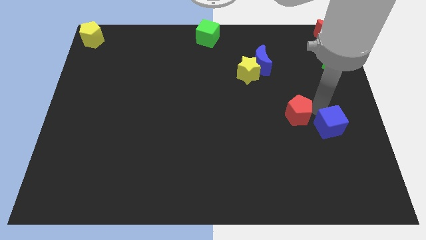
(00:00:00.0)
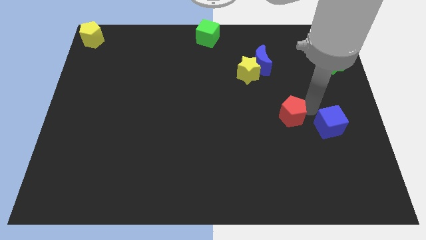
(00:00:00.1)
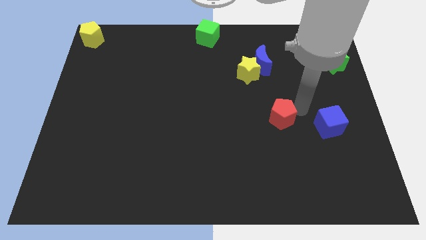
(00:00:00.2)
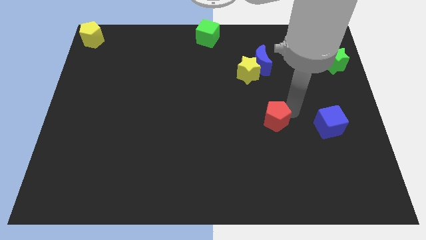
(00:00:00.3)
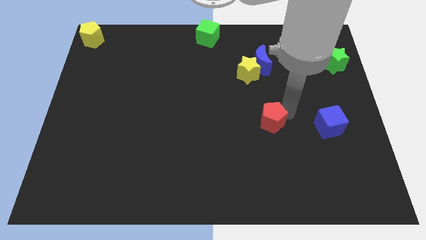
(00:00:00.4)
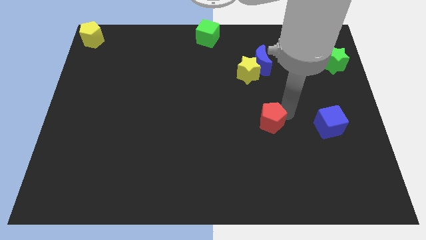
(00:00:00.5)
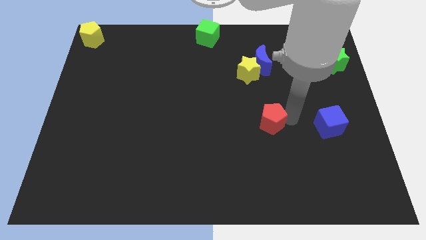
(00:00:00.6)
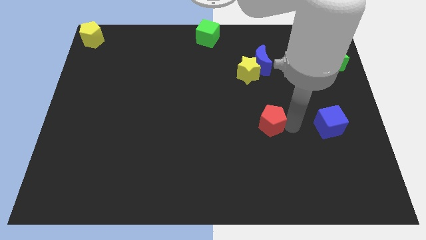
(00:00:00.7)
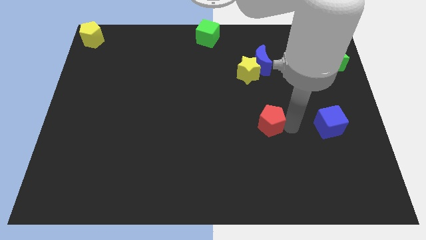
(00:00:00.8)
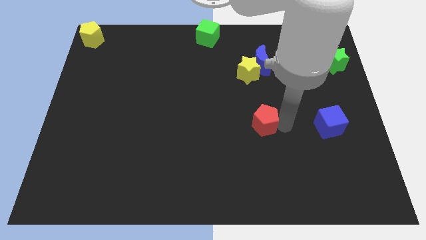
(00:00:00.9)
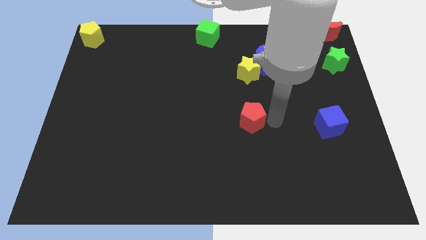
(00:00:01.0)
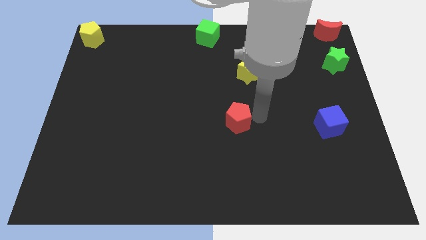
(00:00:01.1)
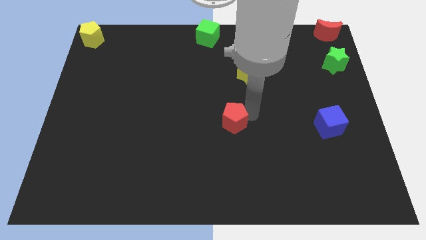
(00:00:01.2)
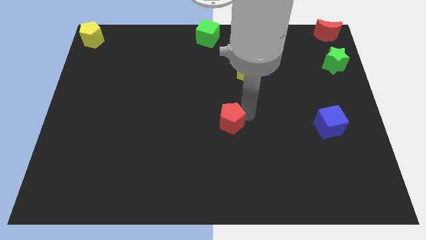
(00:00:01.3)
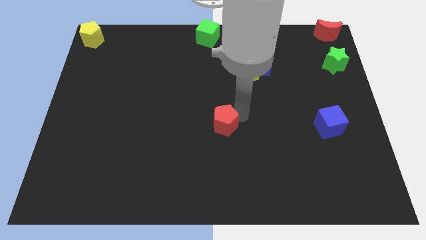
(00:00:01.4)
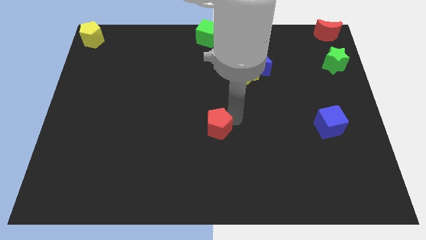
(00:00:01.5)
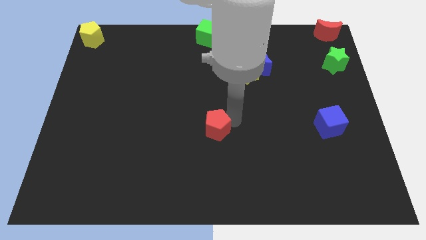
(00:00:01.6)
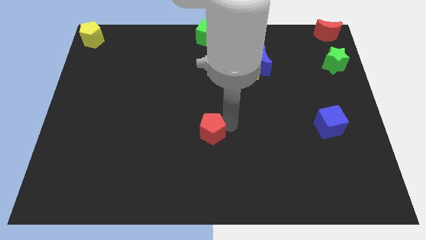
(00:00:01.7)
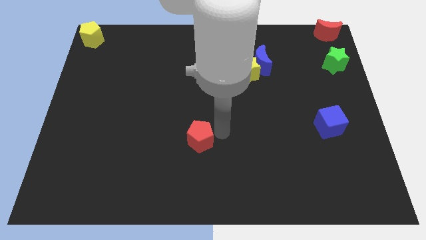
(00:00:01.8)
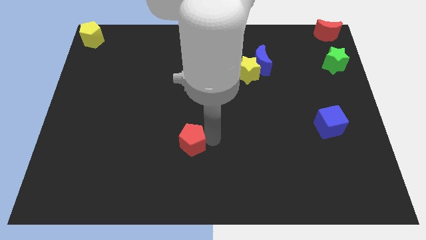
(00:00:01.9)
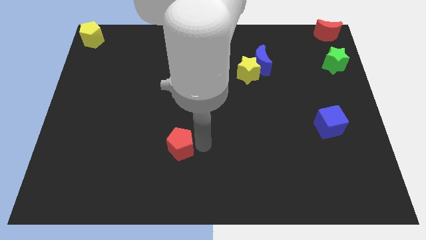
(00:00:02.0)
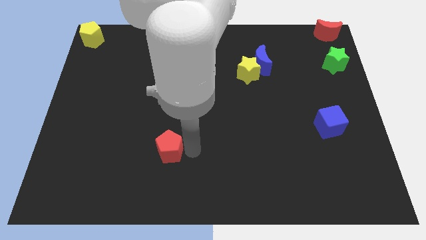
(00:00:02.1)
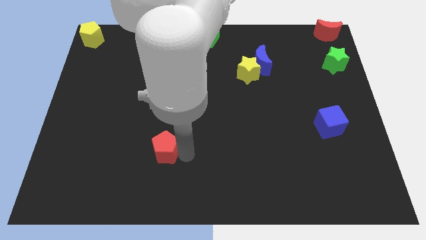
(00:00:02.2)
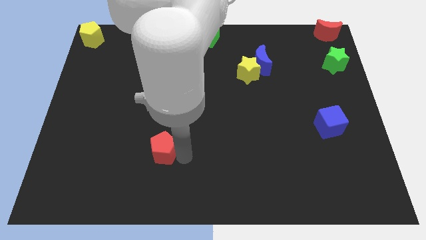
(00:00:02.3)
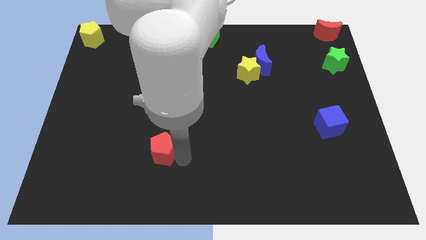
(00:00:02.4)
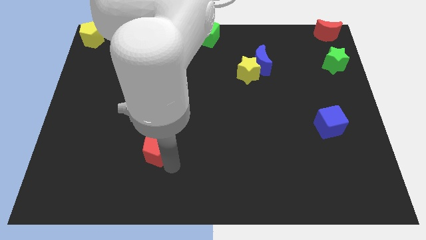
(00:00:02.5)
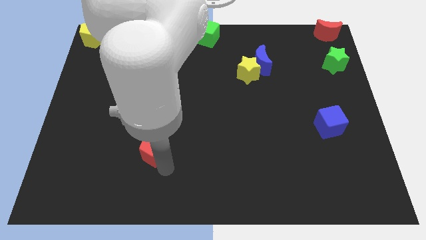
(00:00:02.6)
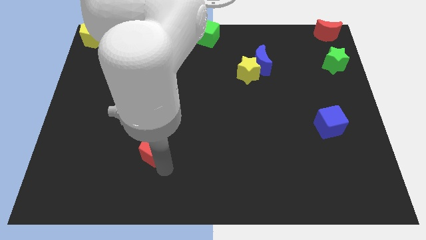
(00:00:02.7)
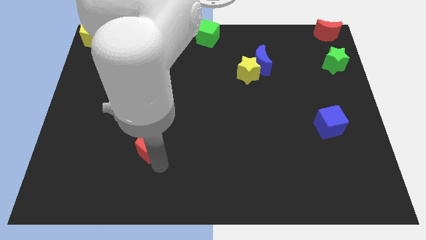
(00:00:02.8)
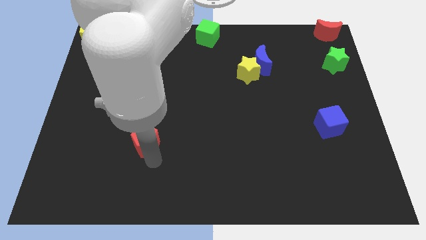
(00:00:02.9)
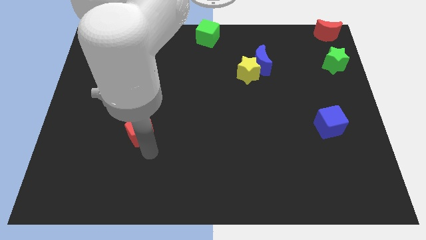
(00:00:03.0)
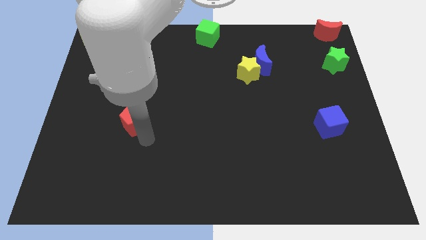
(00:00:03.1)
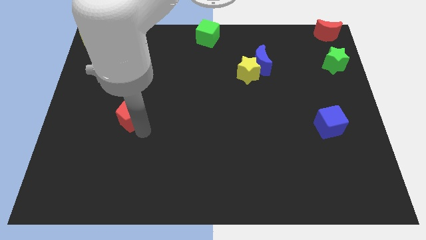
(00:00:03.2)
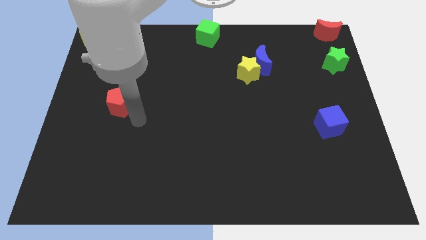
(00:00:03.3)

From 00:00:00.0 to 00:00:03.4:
move the red pentagon towards left

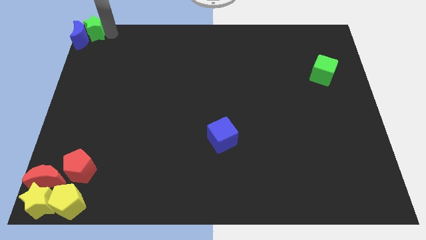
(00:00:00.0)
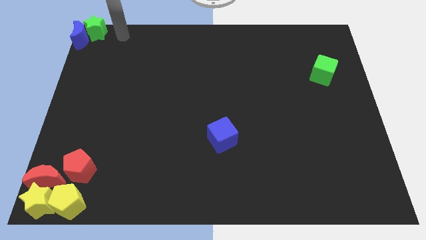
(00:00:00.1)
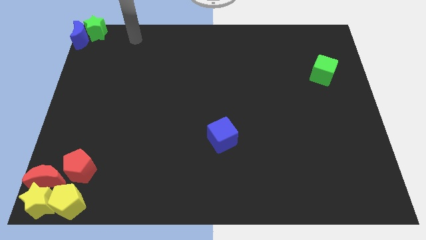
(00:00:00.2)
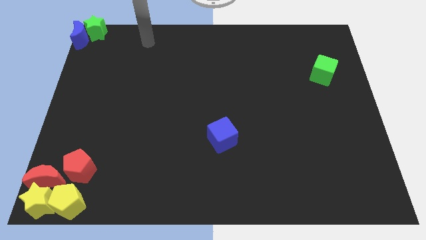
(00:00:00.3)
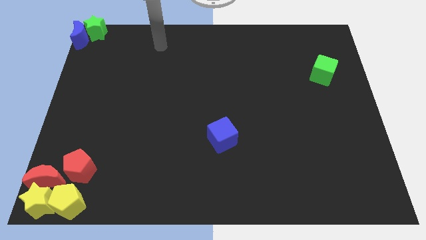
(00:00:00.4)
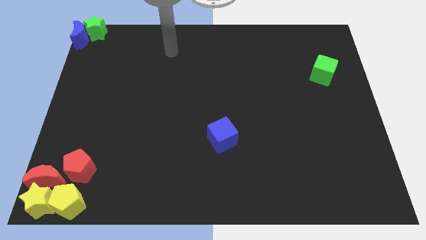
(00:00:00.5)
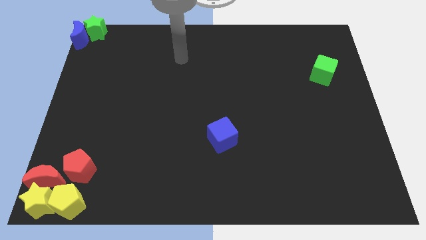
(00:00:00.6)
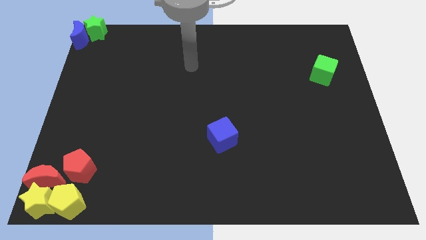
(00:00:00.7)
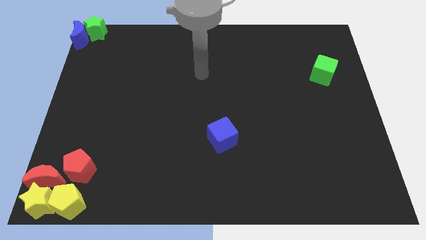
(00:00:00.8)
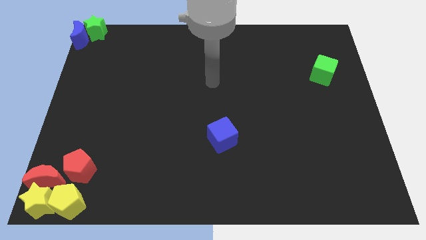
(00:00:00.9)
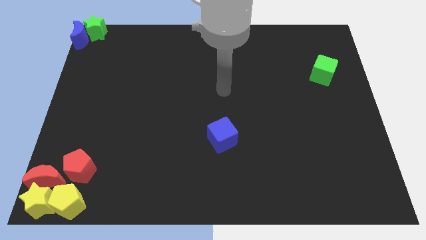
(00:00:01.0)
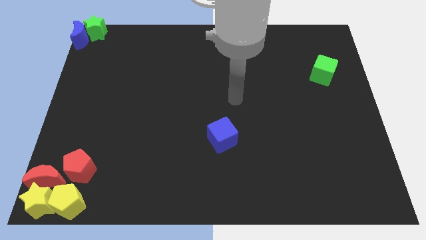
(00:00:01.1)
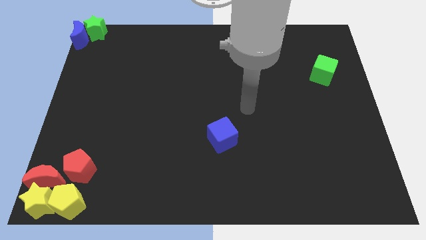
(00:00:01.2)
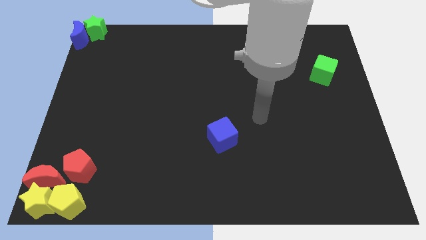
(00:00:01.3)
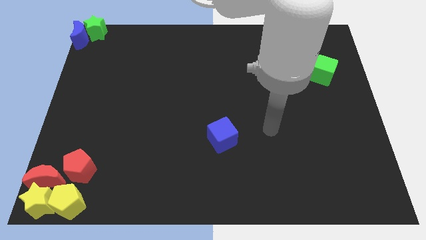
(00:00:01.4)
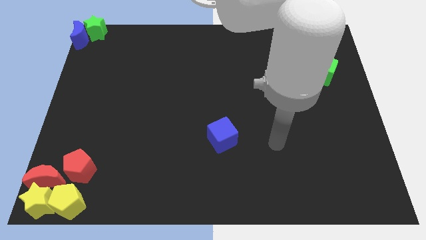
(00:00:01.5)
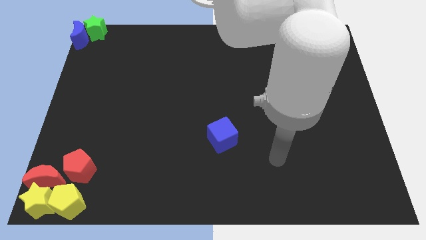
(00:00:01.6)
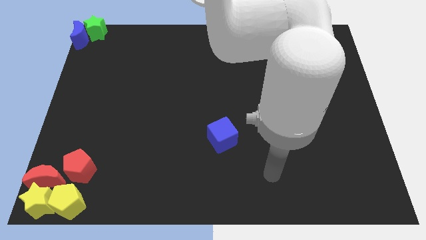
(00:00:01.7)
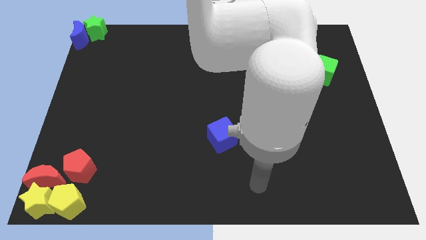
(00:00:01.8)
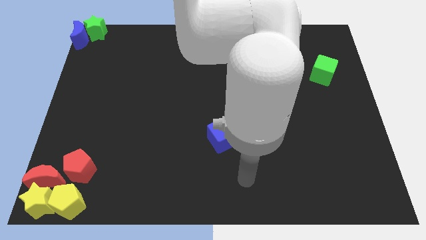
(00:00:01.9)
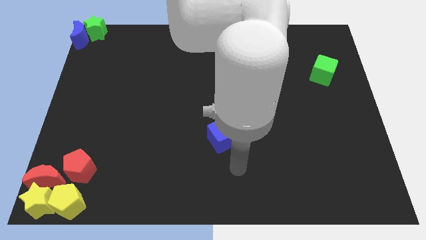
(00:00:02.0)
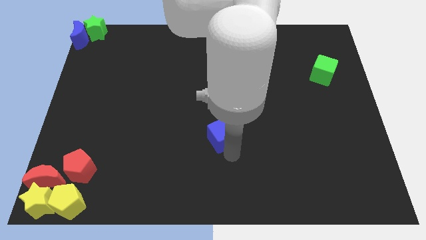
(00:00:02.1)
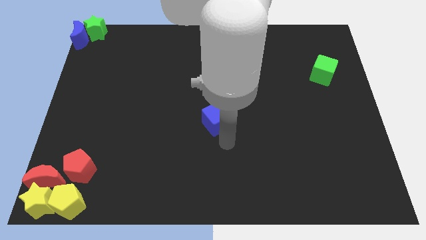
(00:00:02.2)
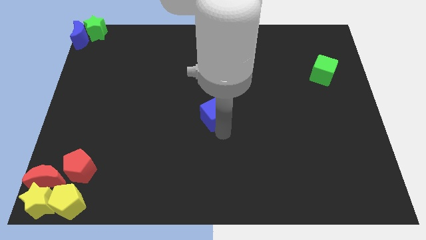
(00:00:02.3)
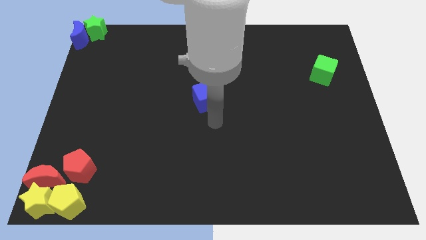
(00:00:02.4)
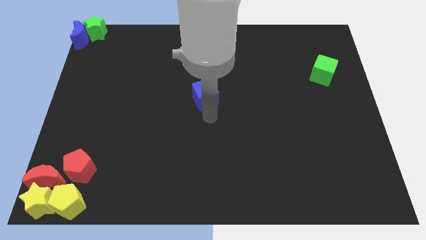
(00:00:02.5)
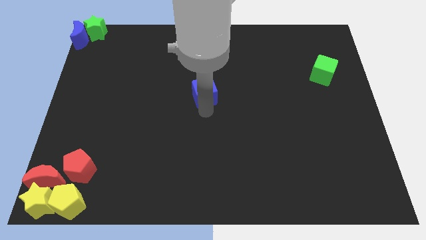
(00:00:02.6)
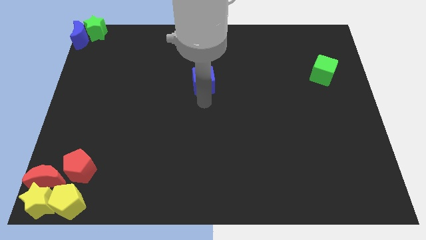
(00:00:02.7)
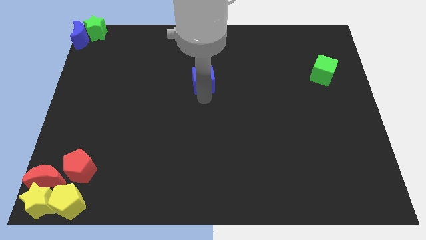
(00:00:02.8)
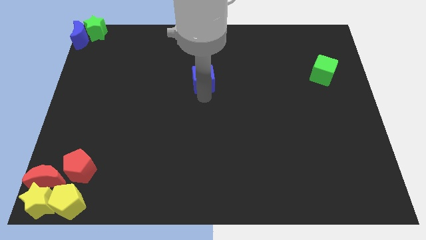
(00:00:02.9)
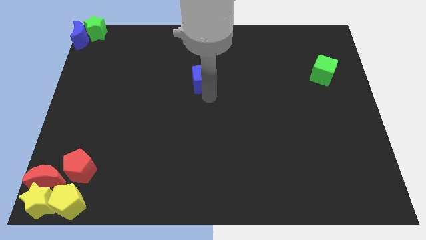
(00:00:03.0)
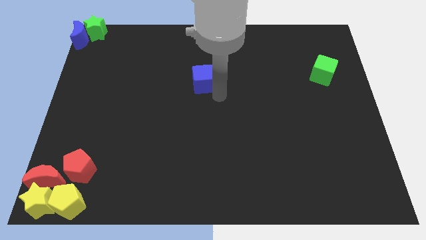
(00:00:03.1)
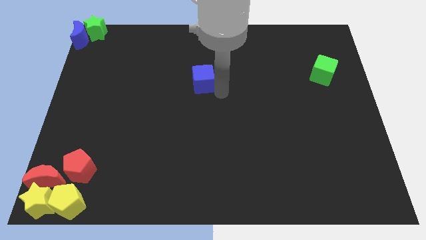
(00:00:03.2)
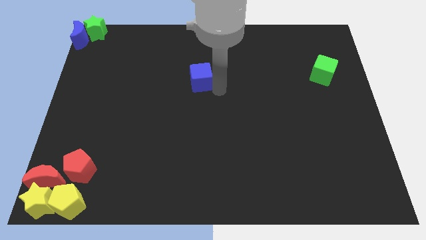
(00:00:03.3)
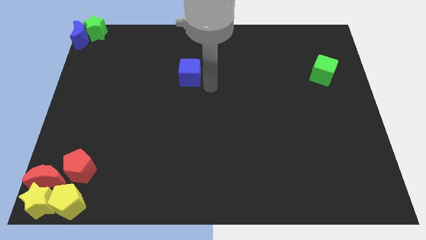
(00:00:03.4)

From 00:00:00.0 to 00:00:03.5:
move the arm away from the greens tar

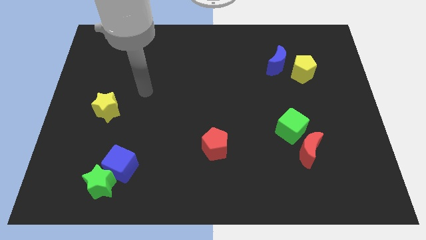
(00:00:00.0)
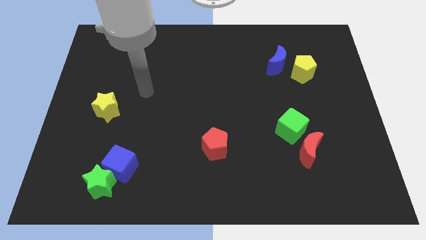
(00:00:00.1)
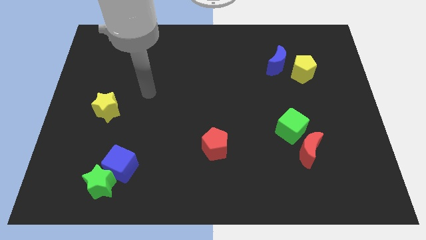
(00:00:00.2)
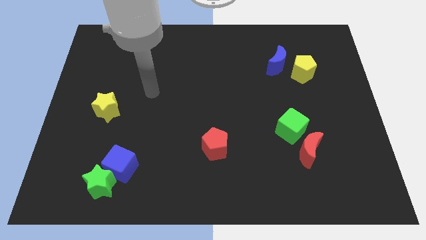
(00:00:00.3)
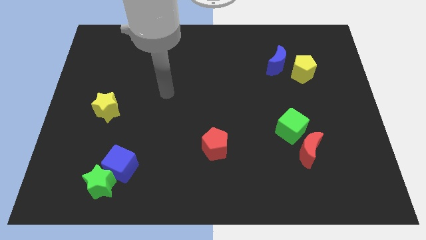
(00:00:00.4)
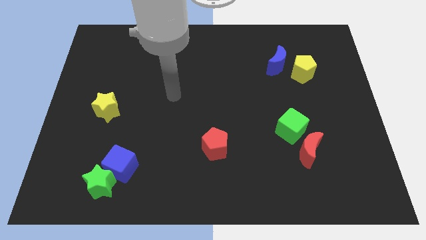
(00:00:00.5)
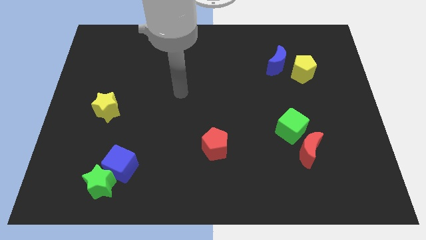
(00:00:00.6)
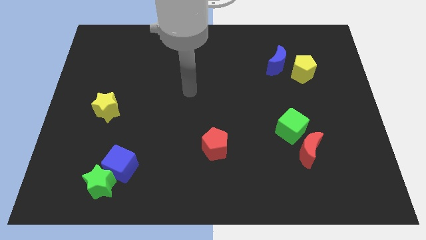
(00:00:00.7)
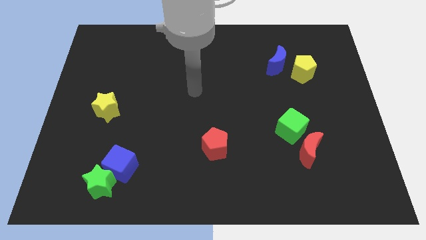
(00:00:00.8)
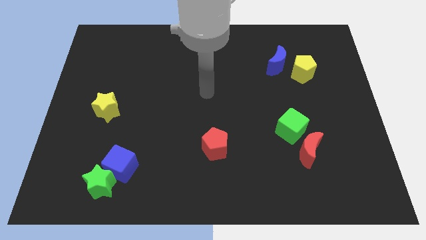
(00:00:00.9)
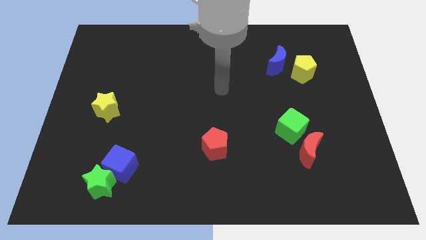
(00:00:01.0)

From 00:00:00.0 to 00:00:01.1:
place your arm at the center of the board

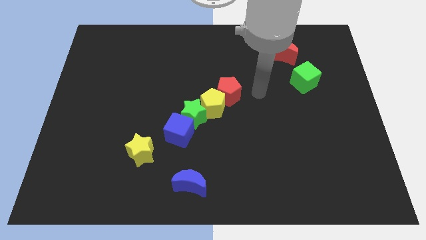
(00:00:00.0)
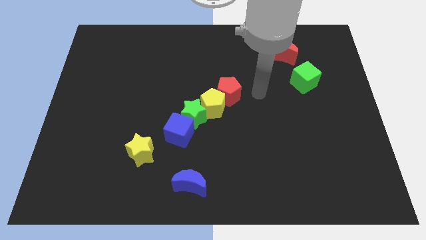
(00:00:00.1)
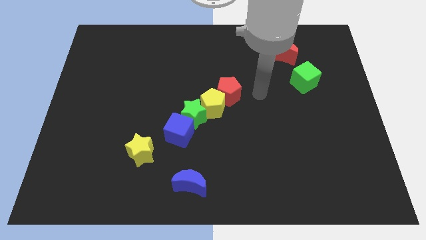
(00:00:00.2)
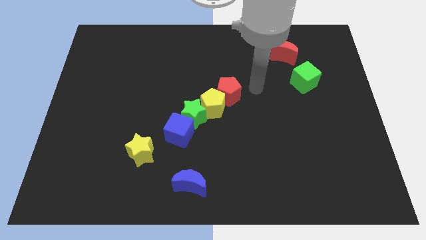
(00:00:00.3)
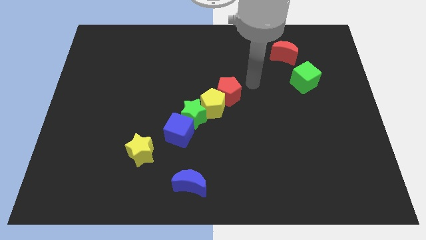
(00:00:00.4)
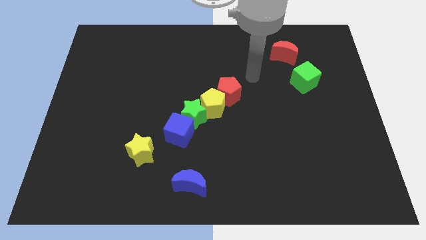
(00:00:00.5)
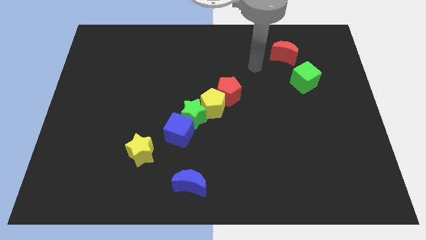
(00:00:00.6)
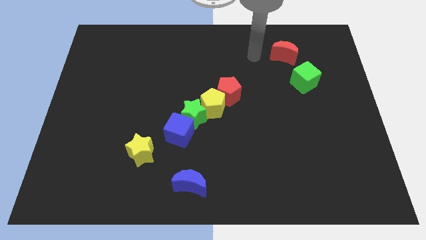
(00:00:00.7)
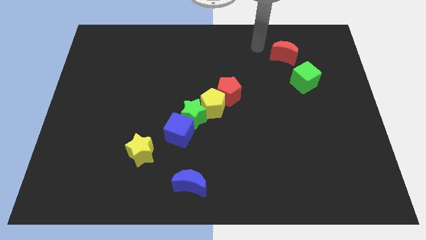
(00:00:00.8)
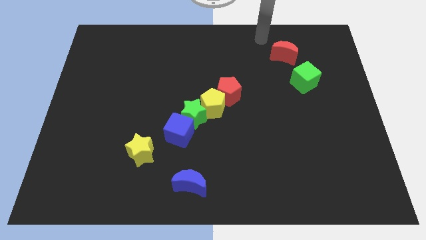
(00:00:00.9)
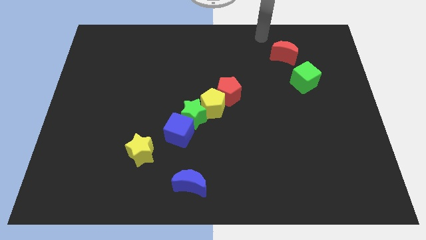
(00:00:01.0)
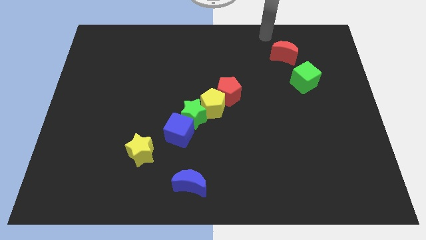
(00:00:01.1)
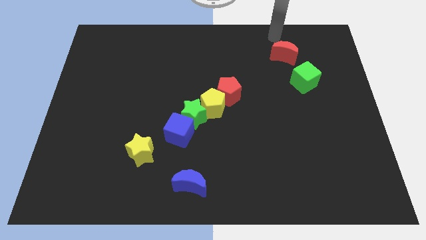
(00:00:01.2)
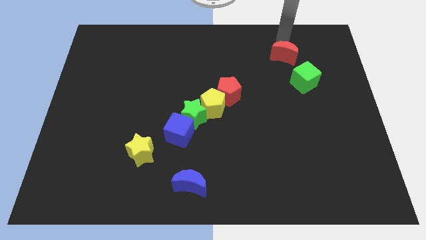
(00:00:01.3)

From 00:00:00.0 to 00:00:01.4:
move the arm above the red crescent
